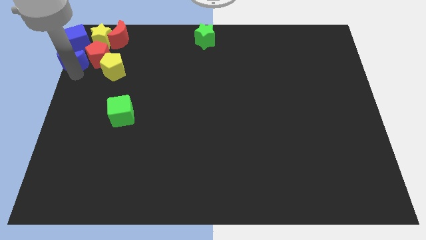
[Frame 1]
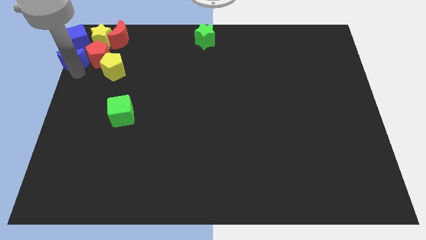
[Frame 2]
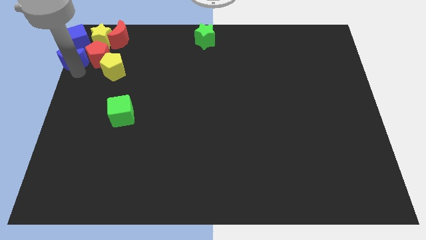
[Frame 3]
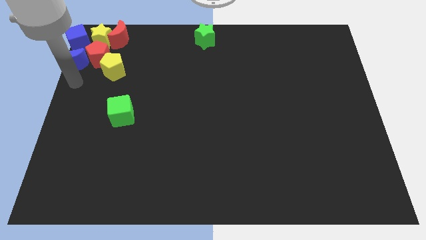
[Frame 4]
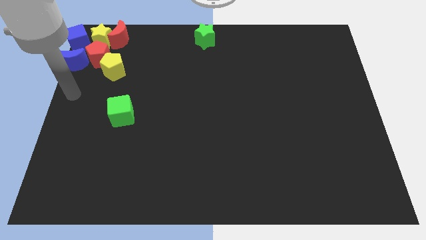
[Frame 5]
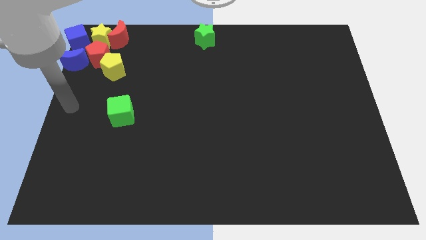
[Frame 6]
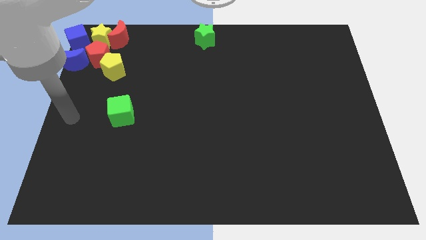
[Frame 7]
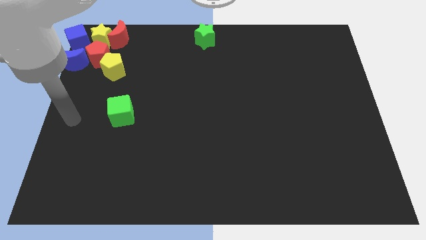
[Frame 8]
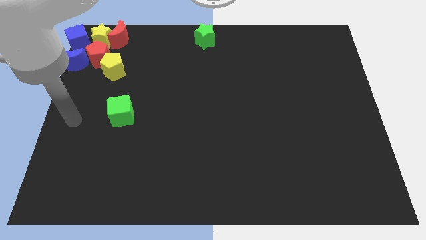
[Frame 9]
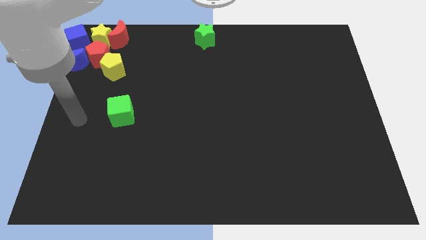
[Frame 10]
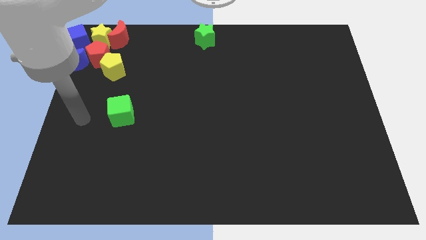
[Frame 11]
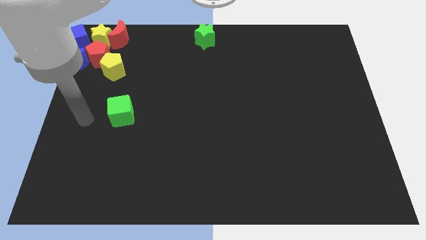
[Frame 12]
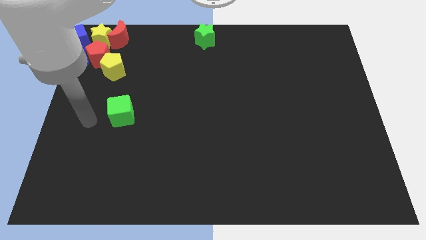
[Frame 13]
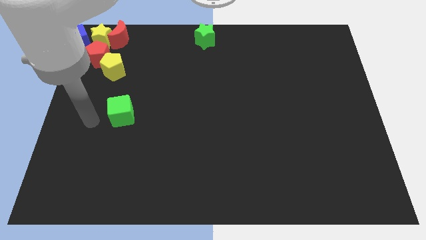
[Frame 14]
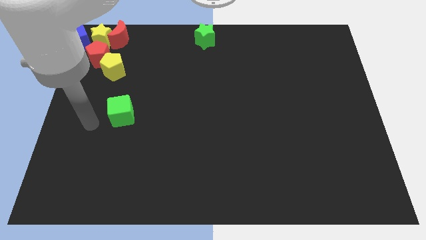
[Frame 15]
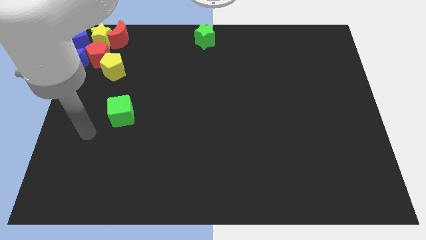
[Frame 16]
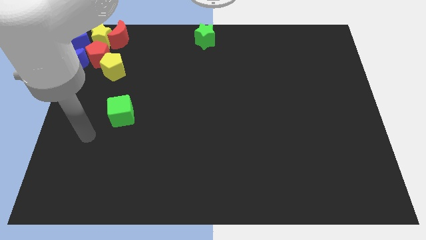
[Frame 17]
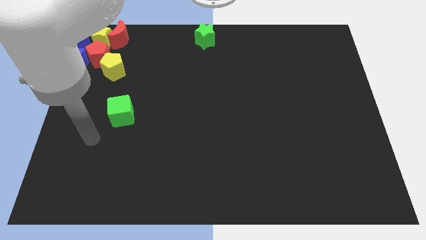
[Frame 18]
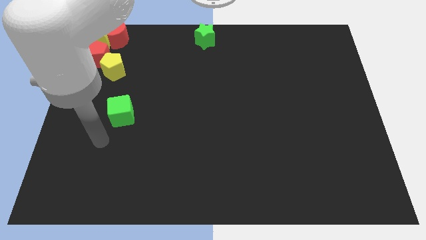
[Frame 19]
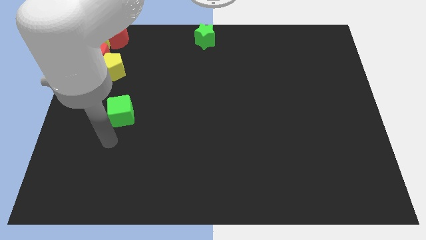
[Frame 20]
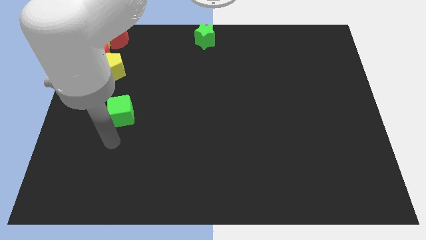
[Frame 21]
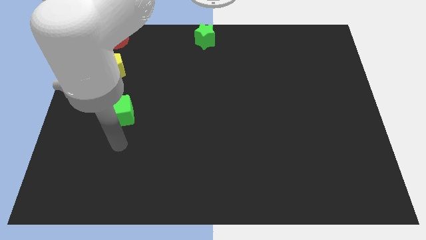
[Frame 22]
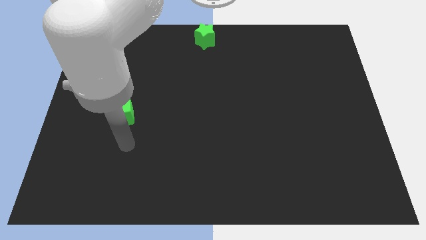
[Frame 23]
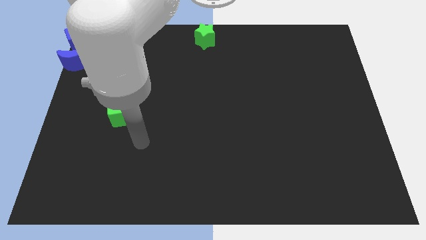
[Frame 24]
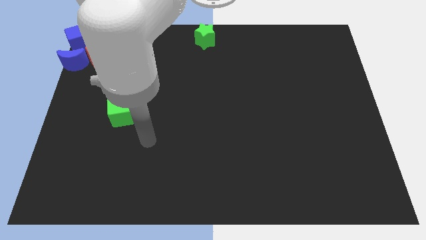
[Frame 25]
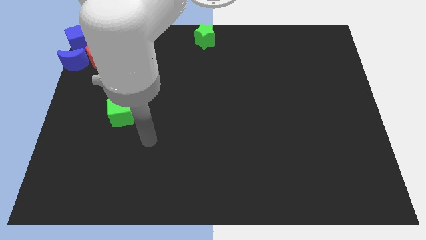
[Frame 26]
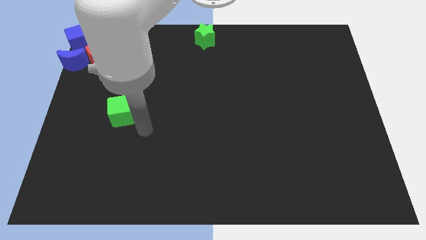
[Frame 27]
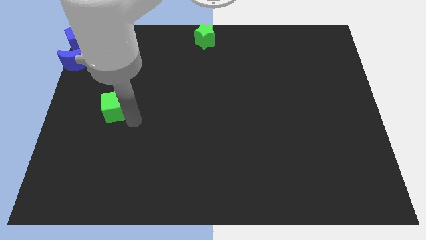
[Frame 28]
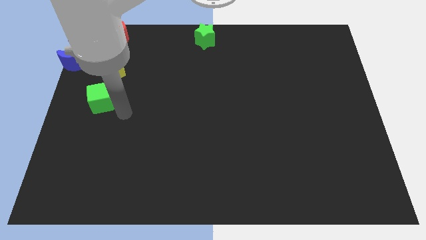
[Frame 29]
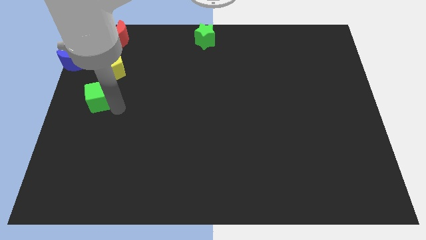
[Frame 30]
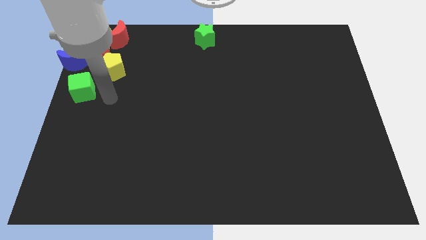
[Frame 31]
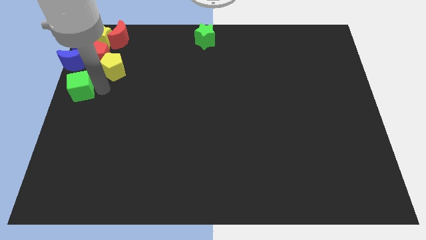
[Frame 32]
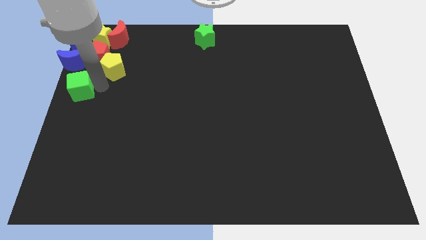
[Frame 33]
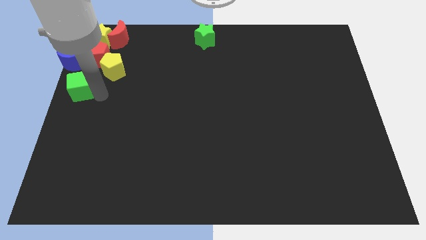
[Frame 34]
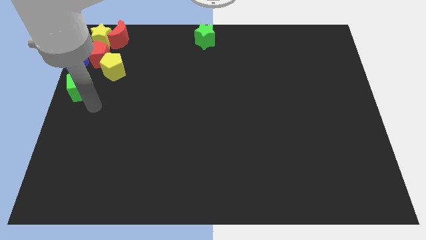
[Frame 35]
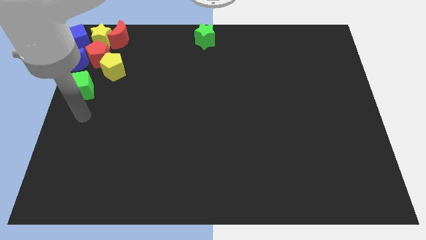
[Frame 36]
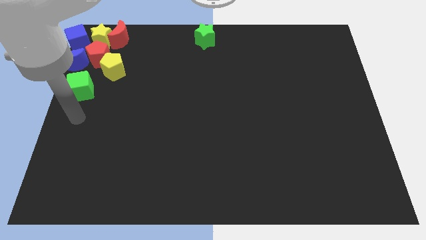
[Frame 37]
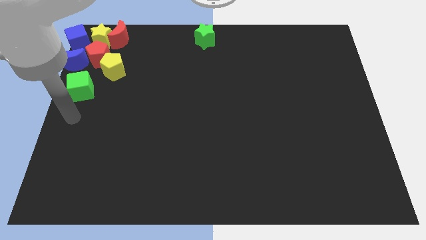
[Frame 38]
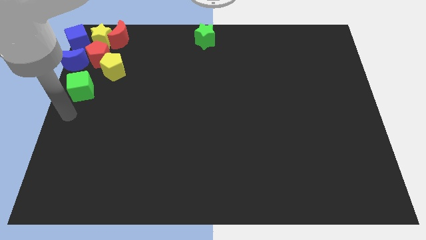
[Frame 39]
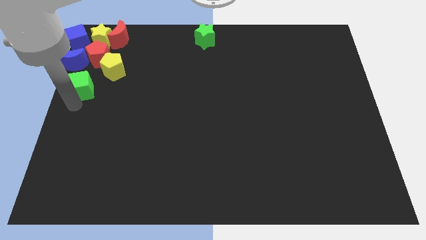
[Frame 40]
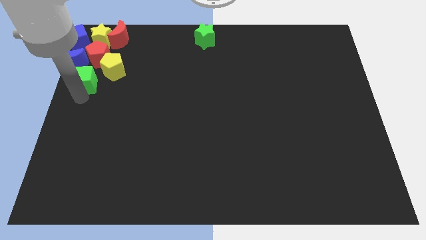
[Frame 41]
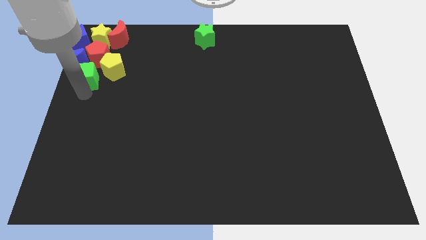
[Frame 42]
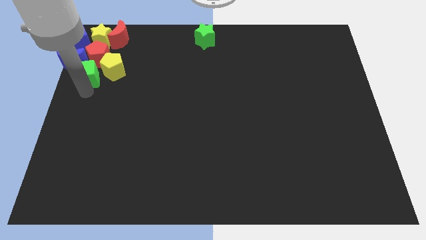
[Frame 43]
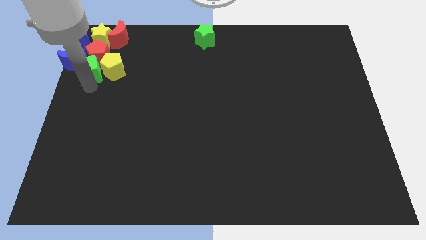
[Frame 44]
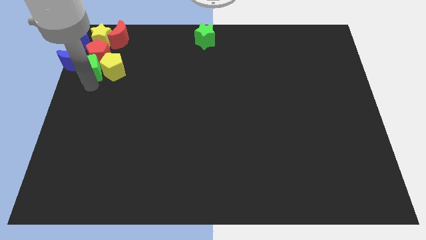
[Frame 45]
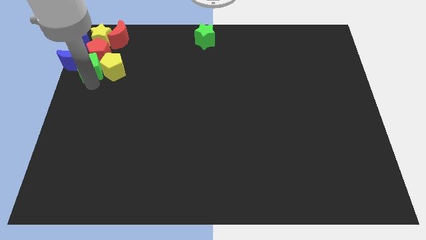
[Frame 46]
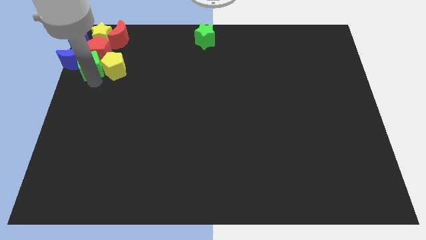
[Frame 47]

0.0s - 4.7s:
push the green cube into the red pentagon

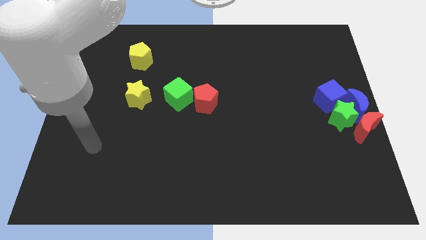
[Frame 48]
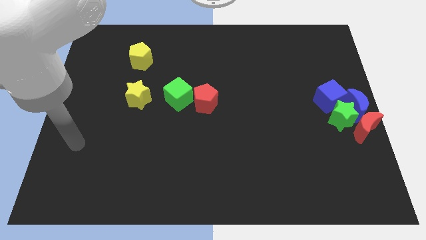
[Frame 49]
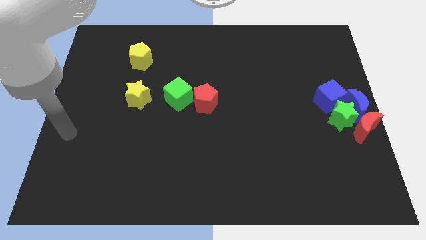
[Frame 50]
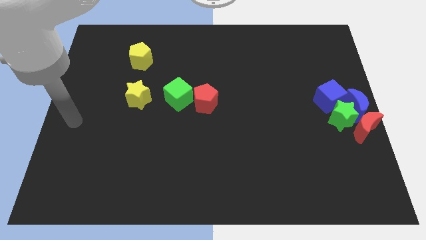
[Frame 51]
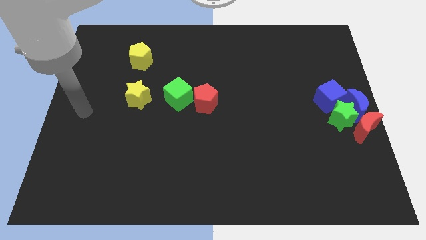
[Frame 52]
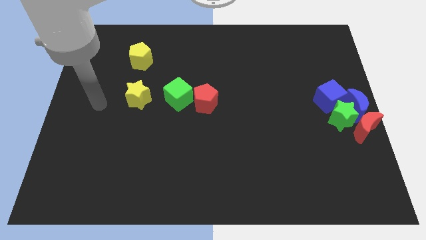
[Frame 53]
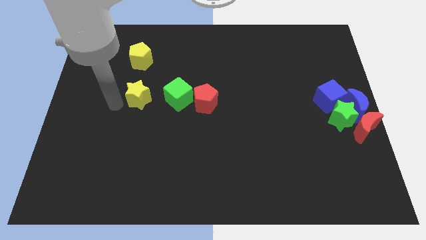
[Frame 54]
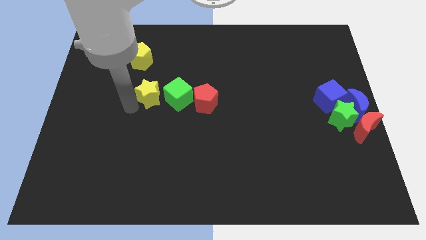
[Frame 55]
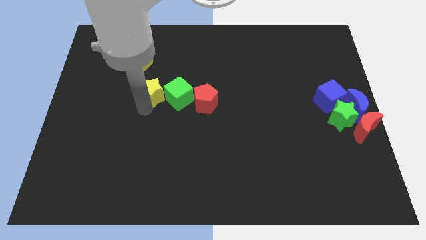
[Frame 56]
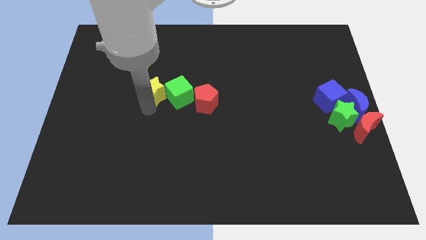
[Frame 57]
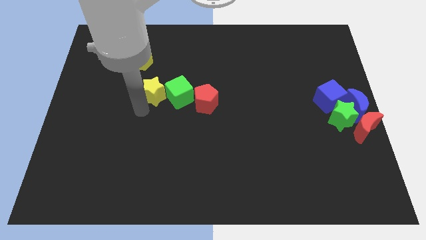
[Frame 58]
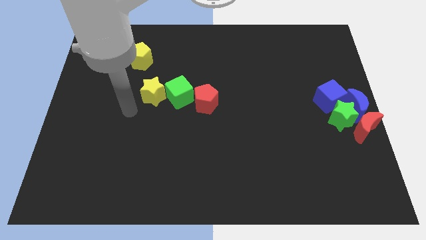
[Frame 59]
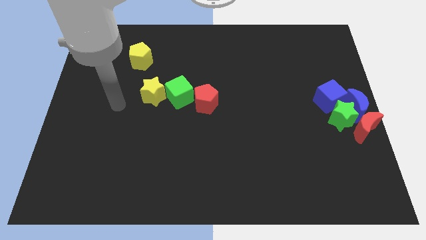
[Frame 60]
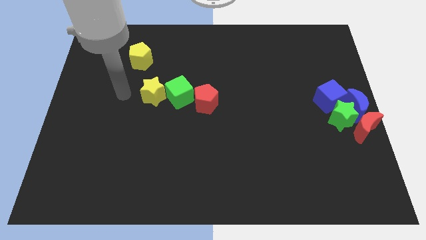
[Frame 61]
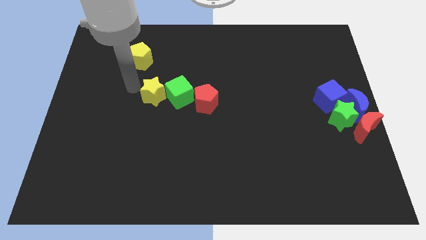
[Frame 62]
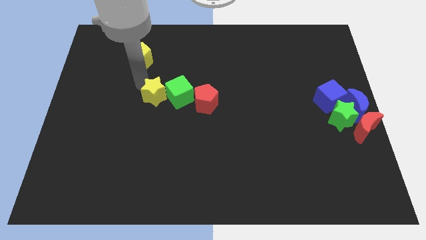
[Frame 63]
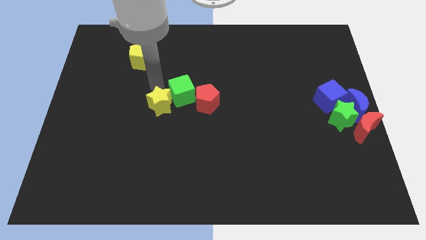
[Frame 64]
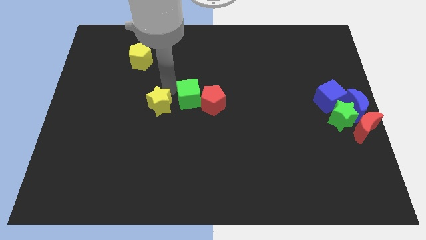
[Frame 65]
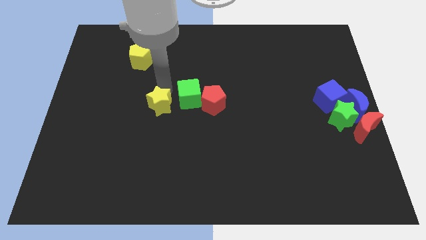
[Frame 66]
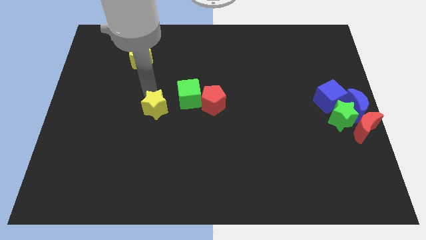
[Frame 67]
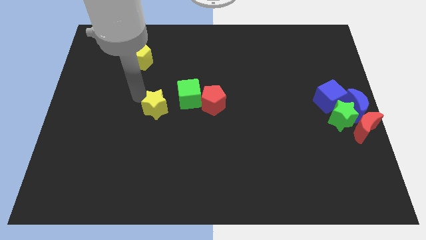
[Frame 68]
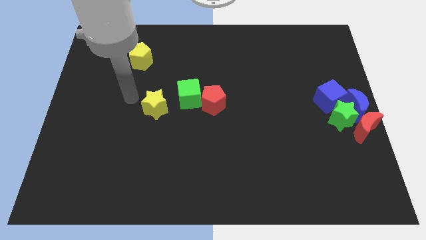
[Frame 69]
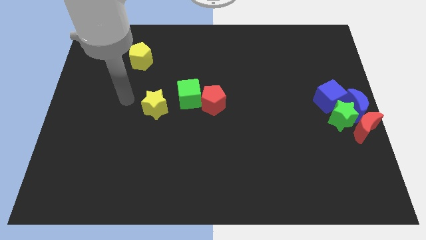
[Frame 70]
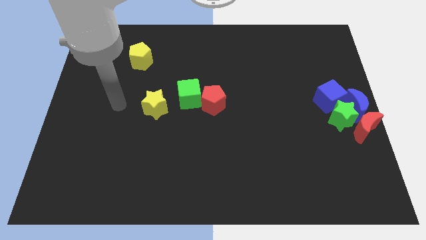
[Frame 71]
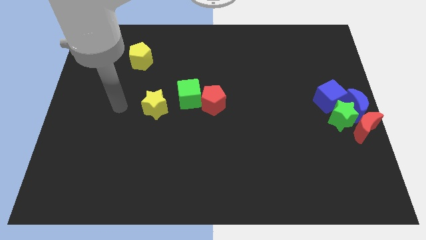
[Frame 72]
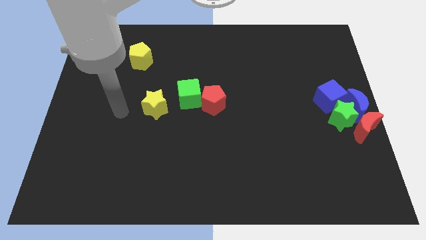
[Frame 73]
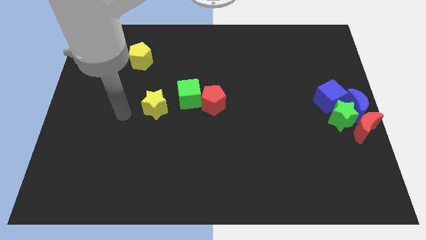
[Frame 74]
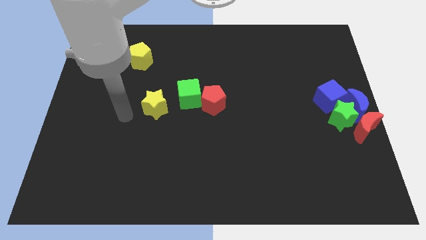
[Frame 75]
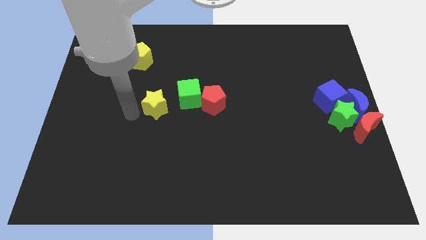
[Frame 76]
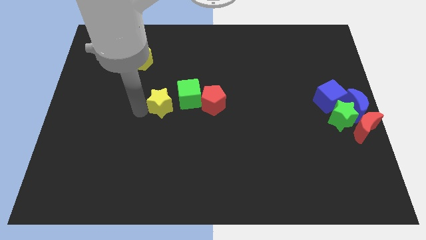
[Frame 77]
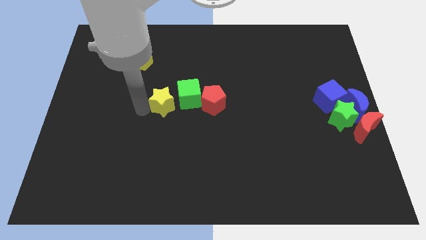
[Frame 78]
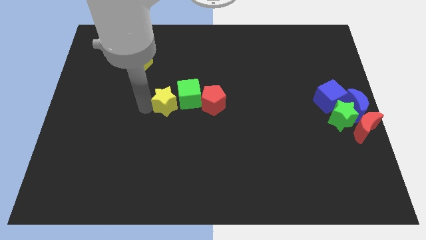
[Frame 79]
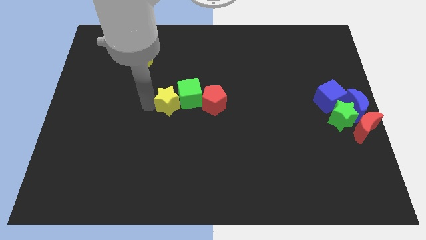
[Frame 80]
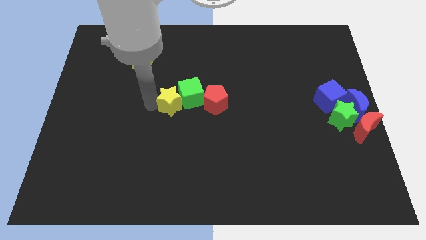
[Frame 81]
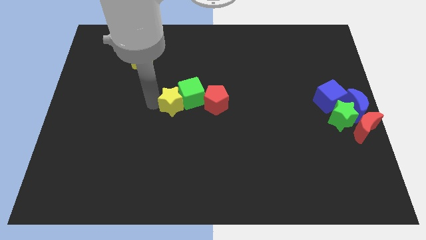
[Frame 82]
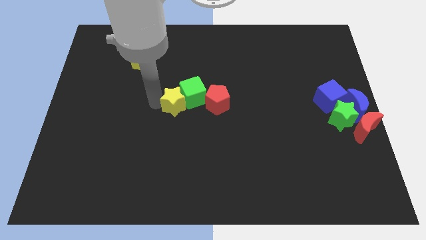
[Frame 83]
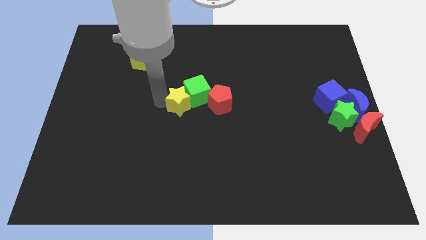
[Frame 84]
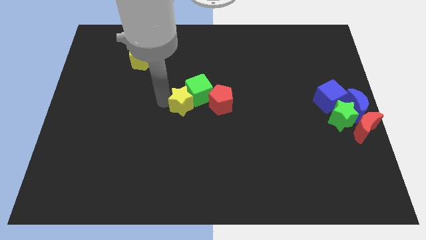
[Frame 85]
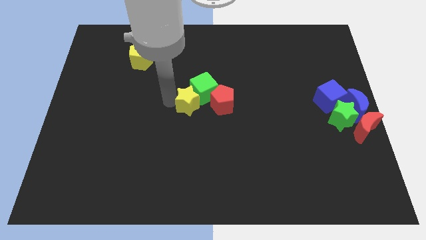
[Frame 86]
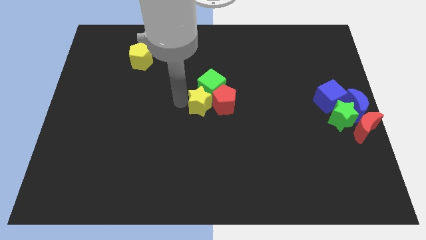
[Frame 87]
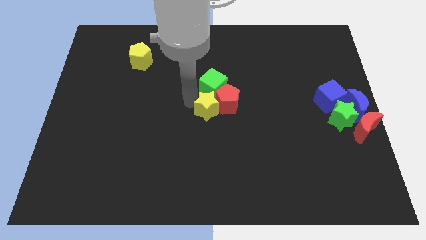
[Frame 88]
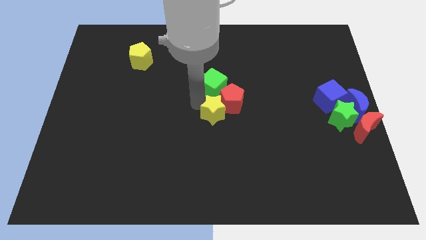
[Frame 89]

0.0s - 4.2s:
push the yellow star into green cube
